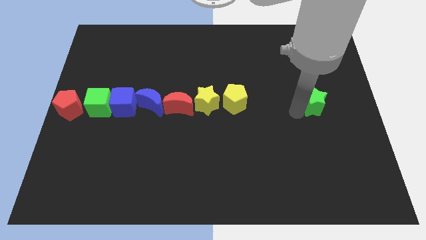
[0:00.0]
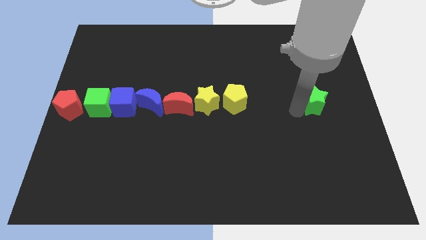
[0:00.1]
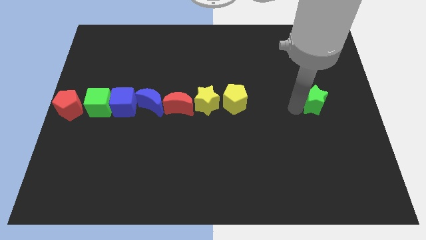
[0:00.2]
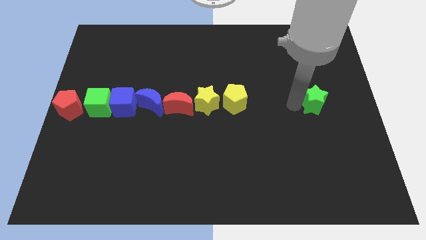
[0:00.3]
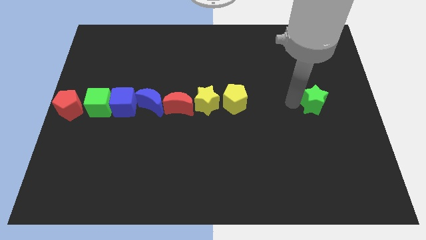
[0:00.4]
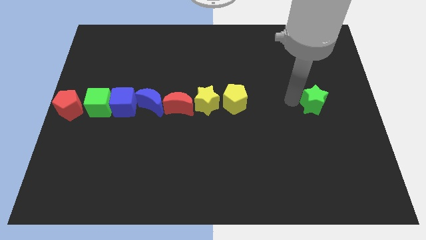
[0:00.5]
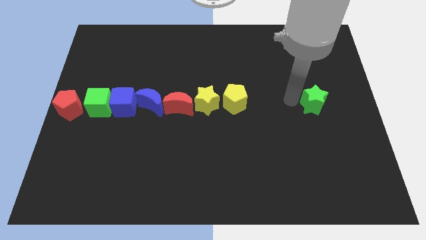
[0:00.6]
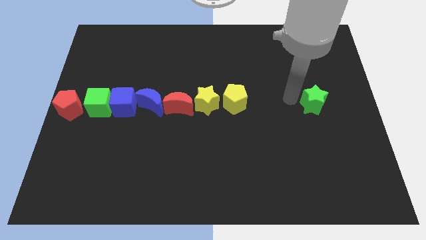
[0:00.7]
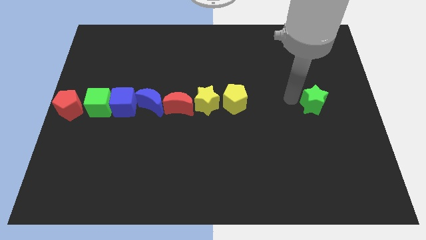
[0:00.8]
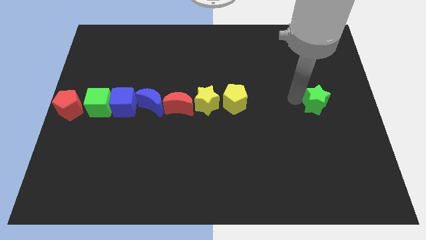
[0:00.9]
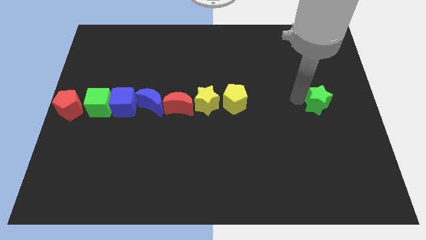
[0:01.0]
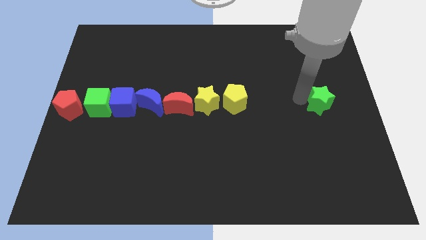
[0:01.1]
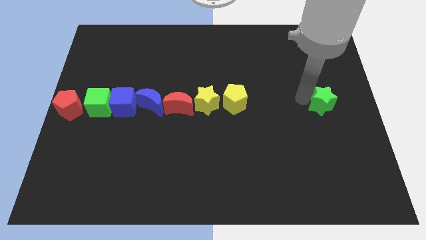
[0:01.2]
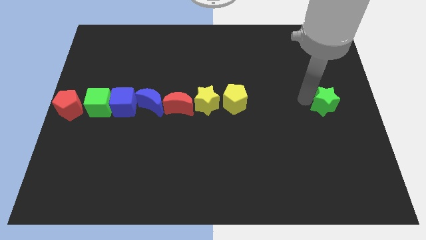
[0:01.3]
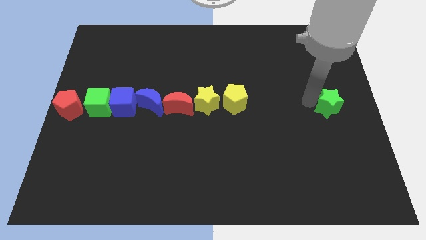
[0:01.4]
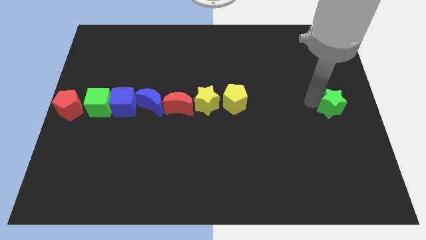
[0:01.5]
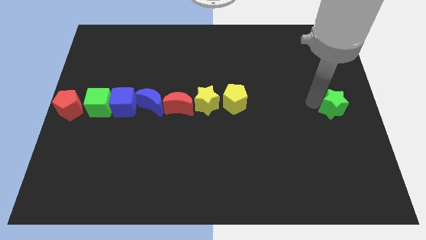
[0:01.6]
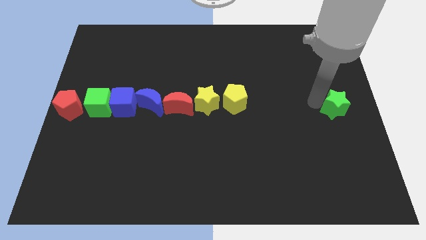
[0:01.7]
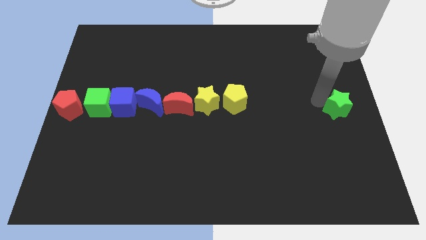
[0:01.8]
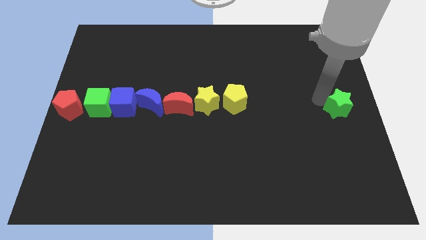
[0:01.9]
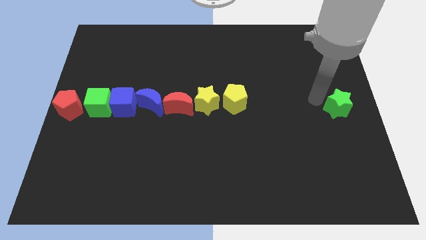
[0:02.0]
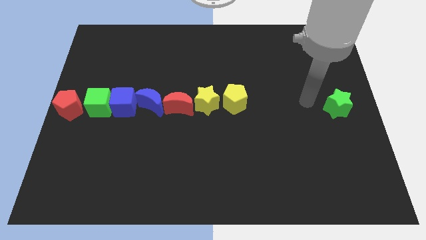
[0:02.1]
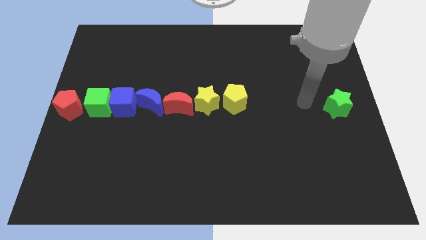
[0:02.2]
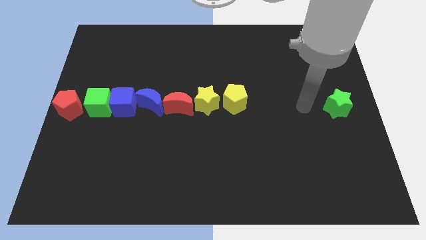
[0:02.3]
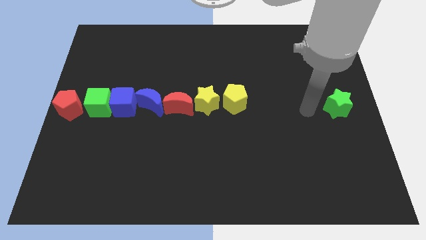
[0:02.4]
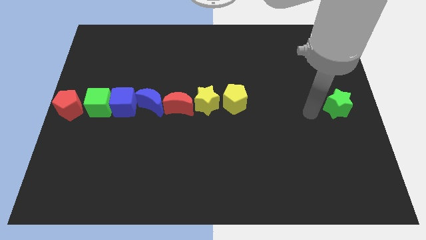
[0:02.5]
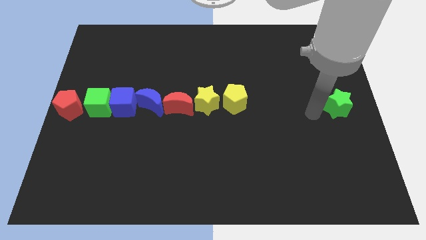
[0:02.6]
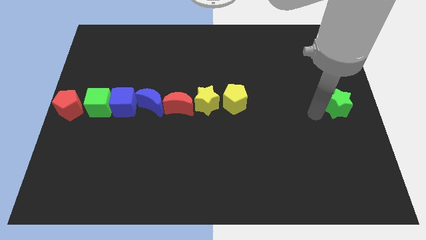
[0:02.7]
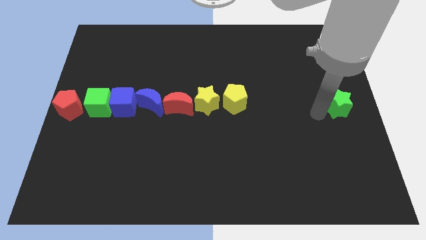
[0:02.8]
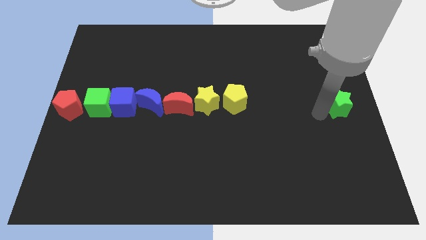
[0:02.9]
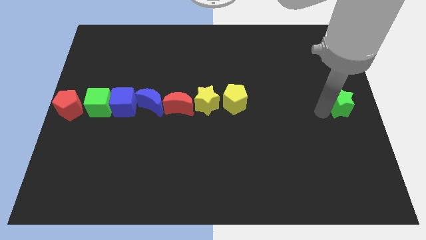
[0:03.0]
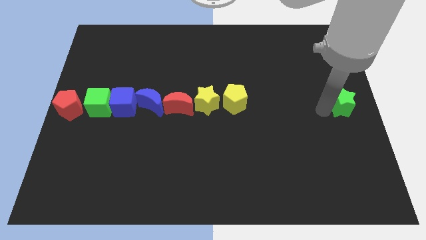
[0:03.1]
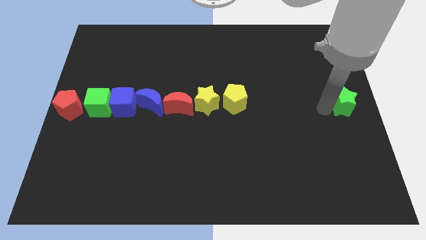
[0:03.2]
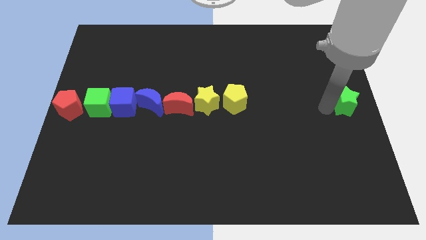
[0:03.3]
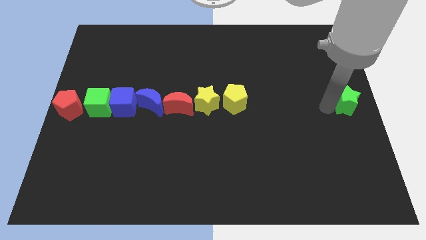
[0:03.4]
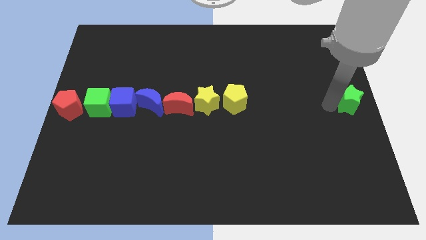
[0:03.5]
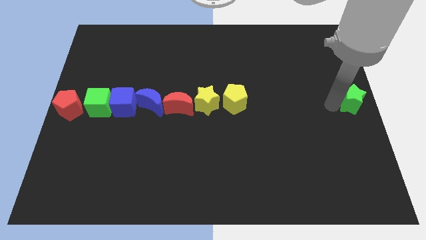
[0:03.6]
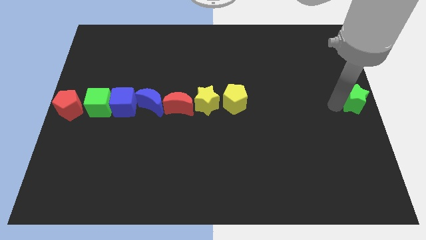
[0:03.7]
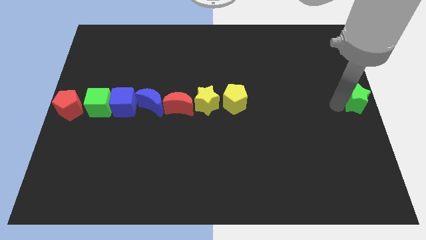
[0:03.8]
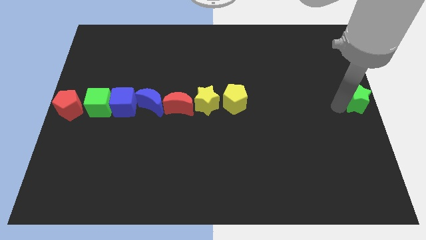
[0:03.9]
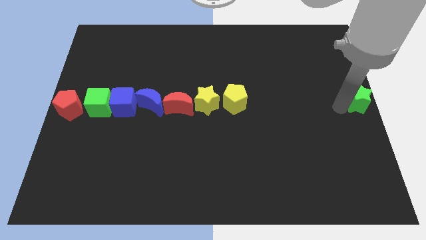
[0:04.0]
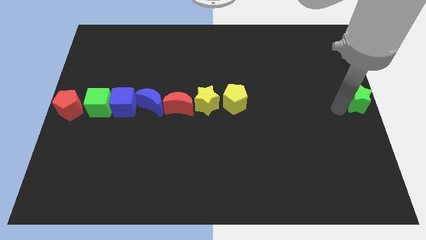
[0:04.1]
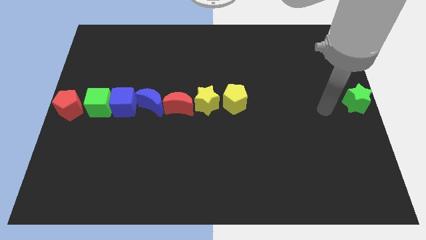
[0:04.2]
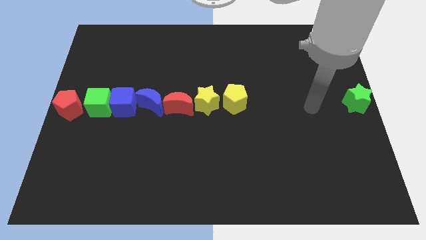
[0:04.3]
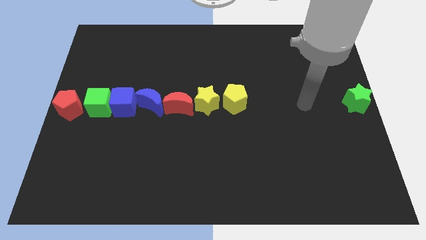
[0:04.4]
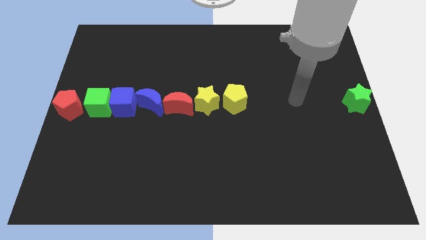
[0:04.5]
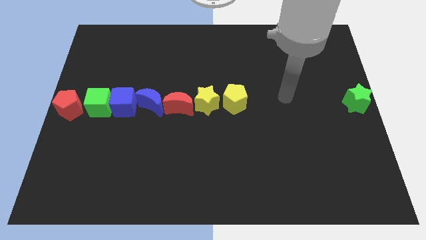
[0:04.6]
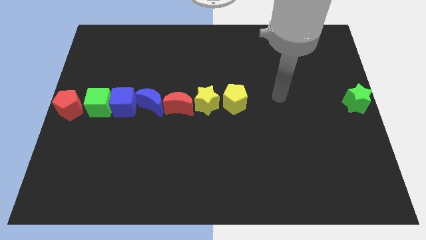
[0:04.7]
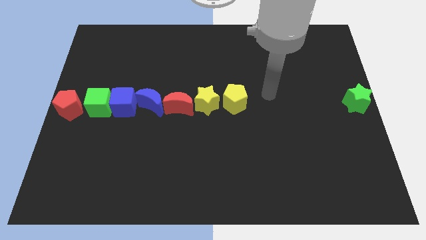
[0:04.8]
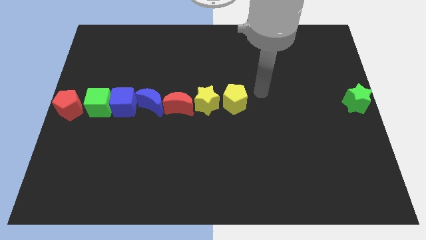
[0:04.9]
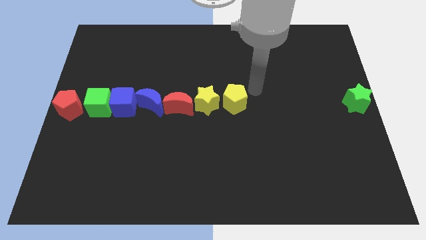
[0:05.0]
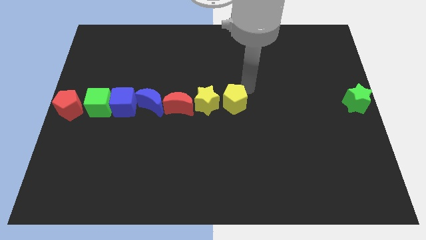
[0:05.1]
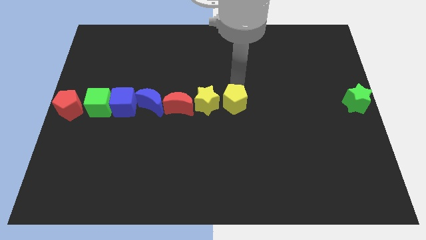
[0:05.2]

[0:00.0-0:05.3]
move the green star to the right center of the board

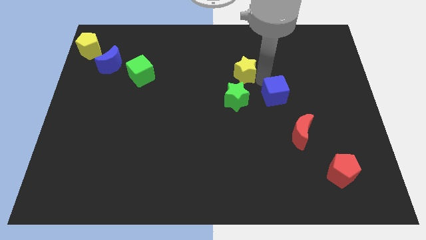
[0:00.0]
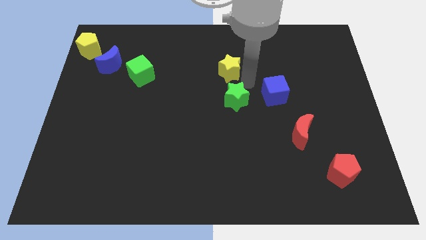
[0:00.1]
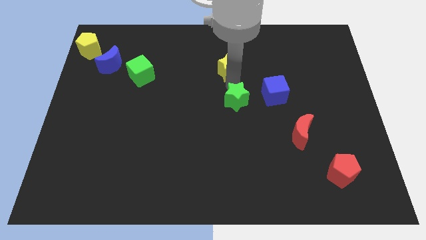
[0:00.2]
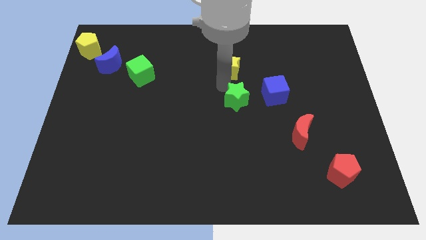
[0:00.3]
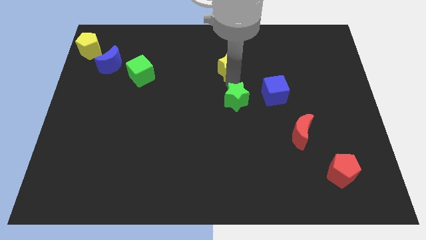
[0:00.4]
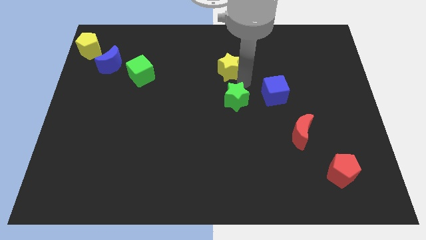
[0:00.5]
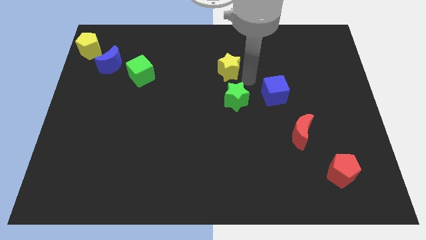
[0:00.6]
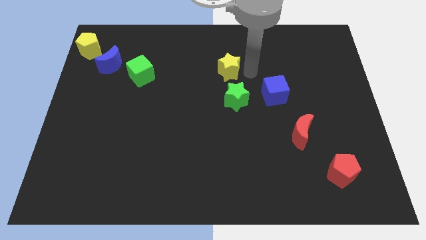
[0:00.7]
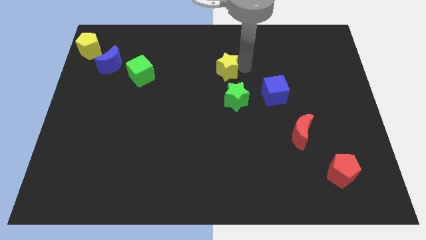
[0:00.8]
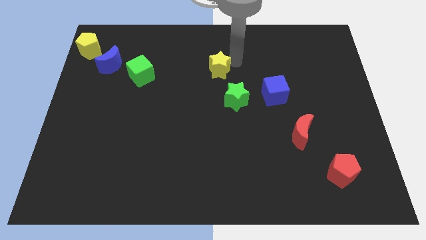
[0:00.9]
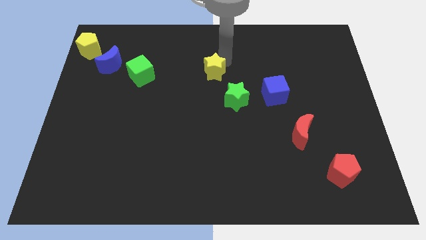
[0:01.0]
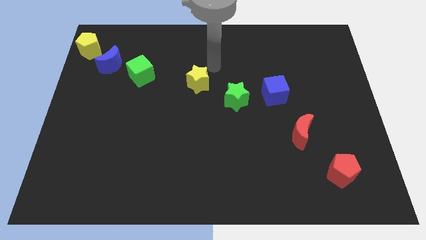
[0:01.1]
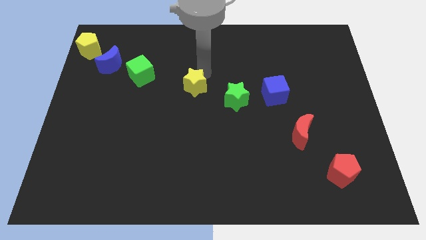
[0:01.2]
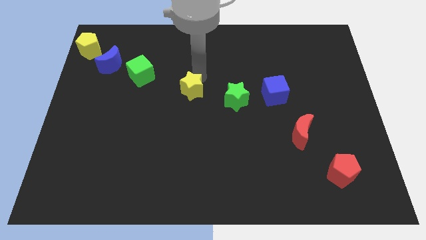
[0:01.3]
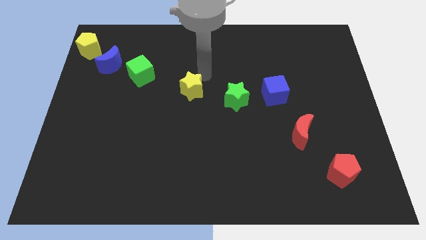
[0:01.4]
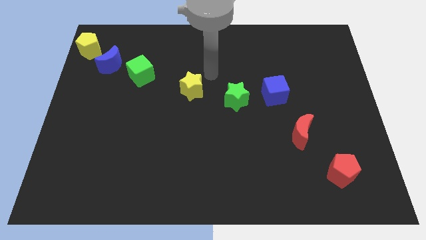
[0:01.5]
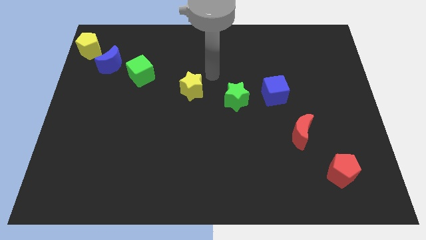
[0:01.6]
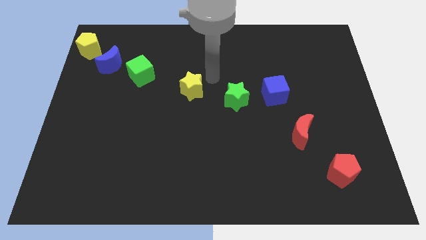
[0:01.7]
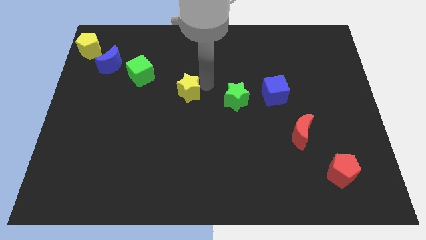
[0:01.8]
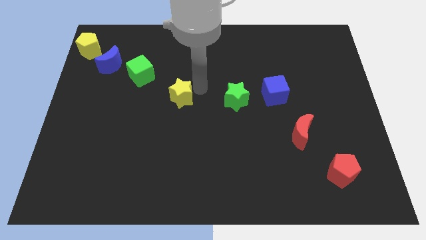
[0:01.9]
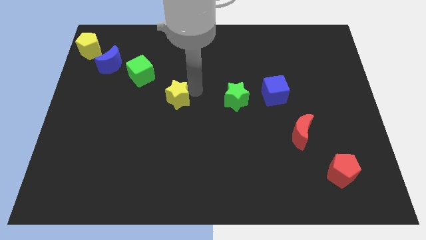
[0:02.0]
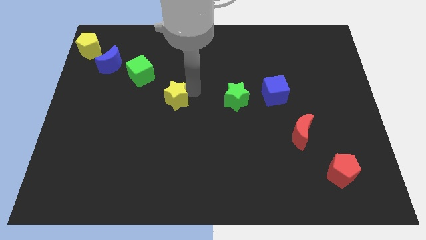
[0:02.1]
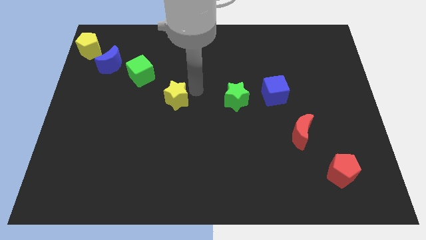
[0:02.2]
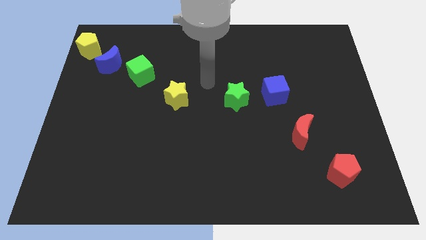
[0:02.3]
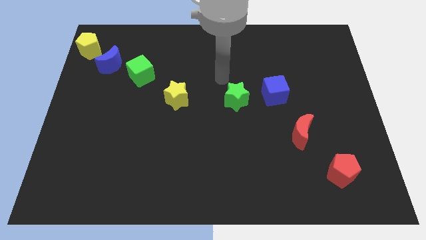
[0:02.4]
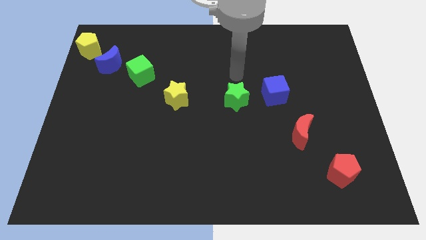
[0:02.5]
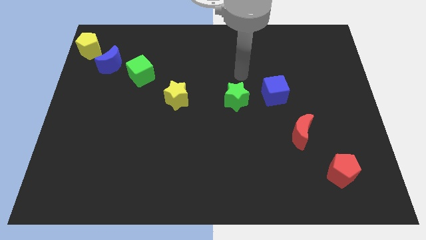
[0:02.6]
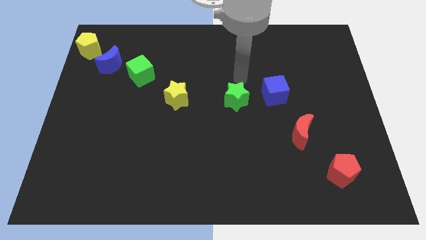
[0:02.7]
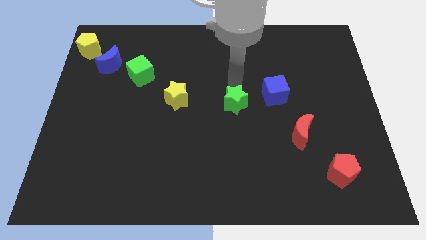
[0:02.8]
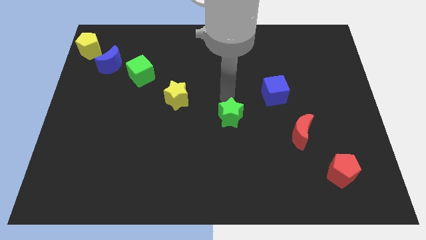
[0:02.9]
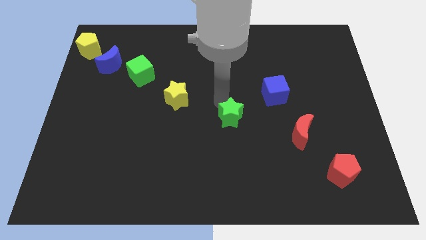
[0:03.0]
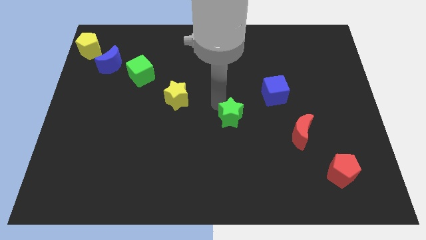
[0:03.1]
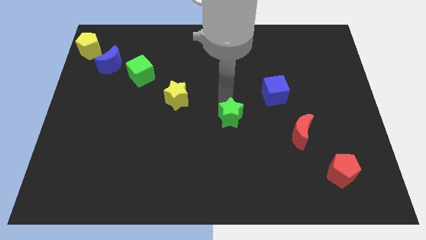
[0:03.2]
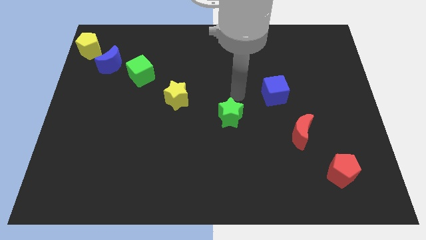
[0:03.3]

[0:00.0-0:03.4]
place the yellow star diagonal to the green cube

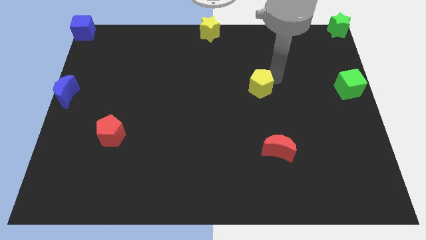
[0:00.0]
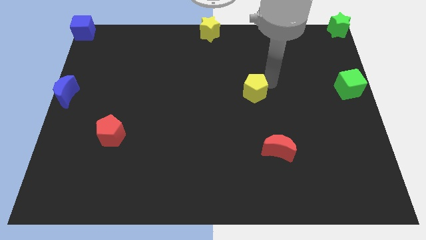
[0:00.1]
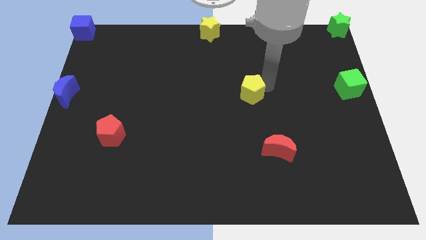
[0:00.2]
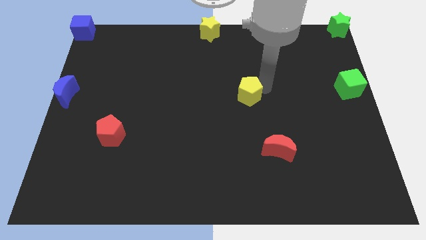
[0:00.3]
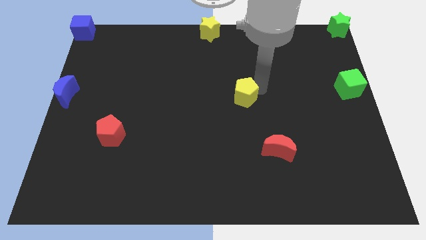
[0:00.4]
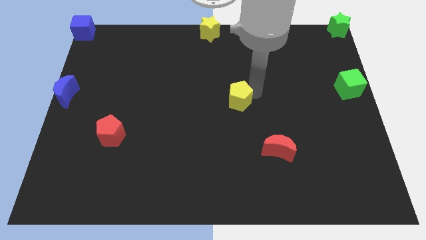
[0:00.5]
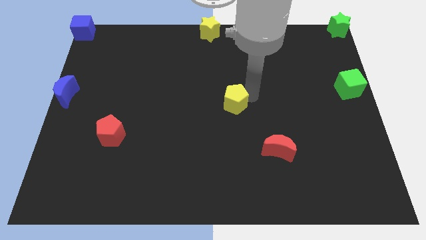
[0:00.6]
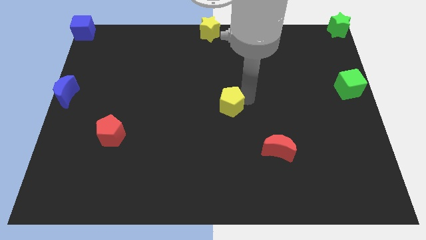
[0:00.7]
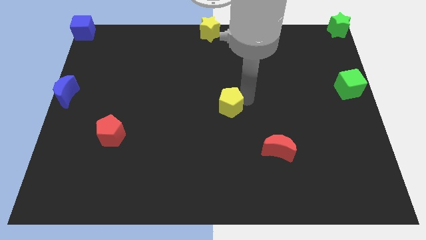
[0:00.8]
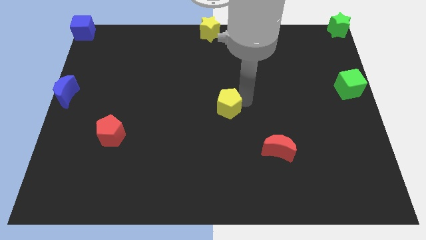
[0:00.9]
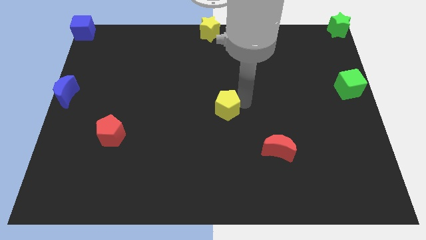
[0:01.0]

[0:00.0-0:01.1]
place the yellow pentagon to the center
